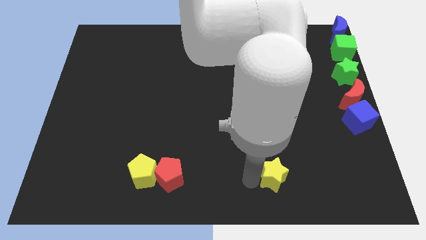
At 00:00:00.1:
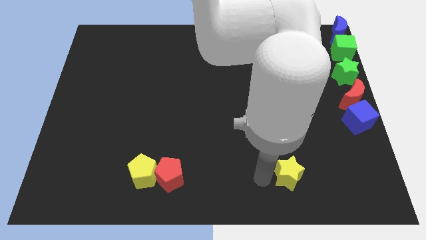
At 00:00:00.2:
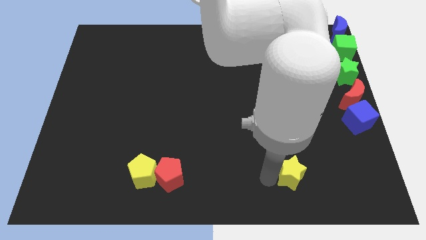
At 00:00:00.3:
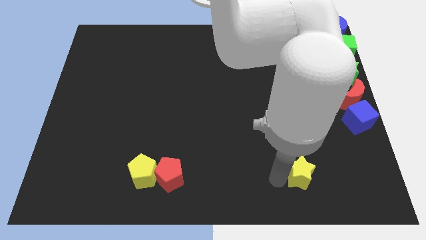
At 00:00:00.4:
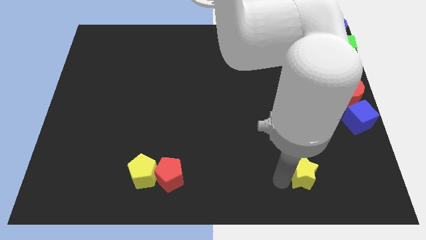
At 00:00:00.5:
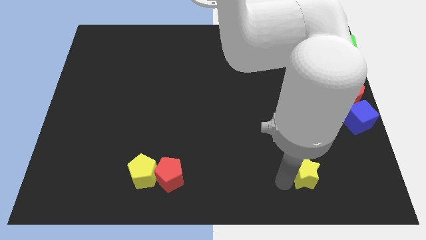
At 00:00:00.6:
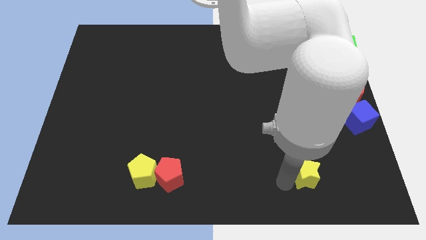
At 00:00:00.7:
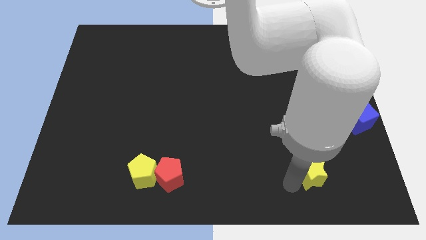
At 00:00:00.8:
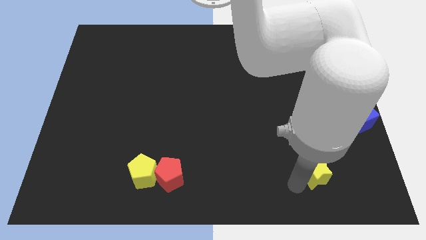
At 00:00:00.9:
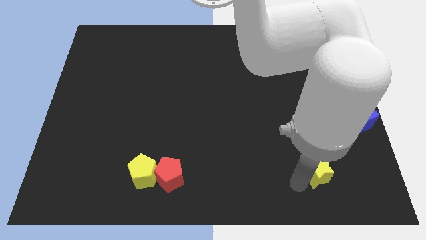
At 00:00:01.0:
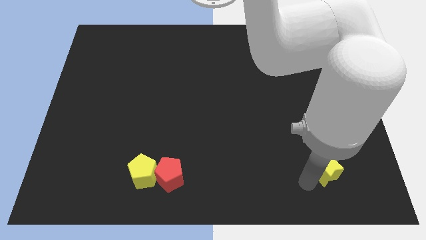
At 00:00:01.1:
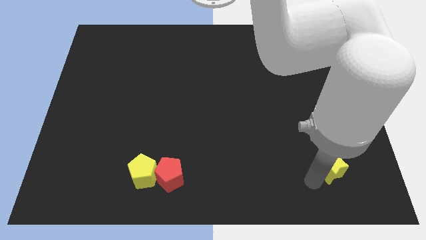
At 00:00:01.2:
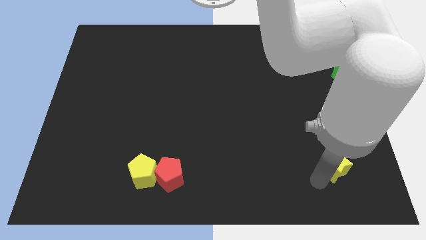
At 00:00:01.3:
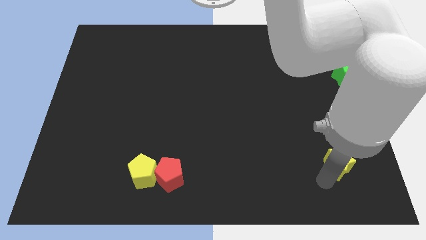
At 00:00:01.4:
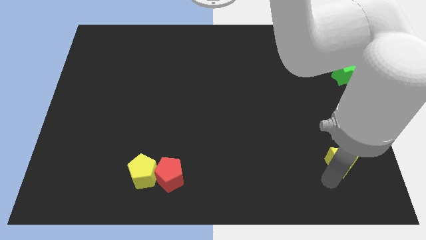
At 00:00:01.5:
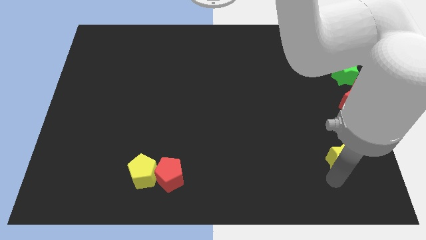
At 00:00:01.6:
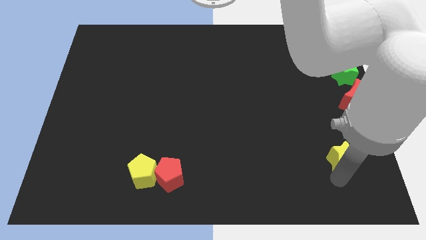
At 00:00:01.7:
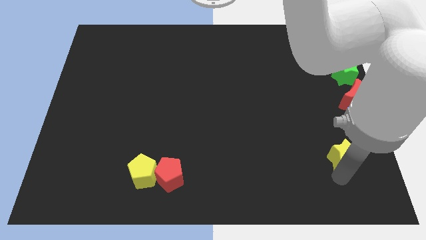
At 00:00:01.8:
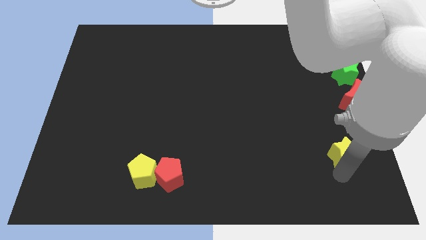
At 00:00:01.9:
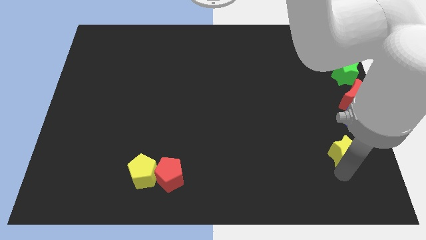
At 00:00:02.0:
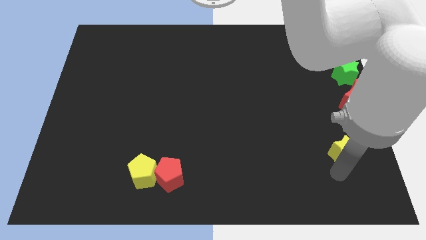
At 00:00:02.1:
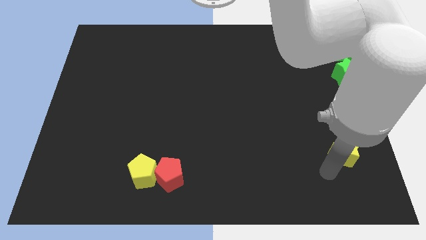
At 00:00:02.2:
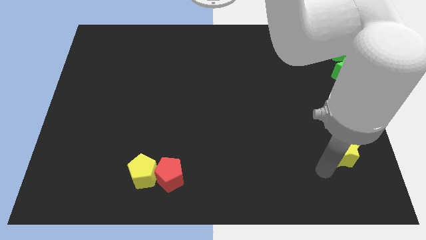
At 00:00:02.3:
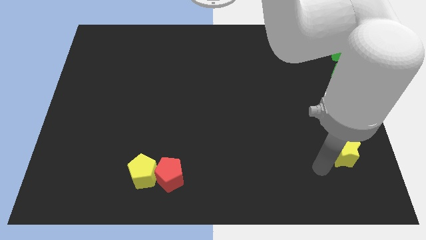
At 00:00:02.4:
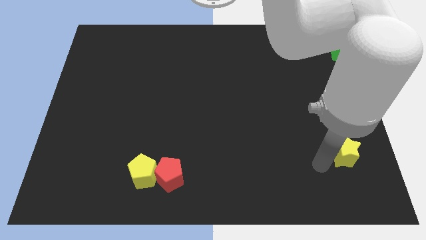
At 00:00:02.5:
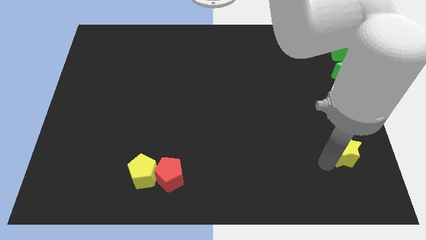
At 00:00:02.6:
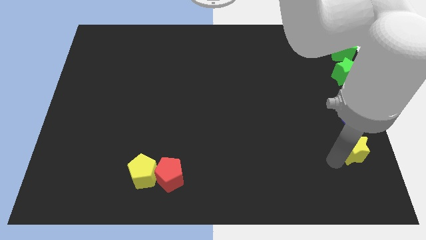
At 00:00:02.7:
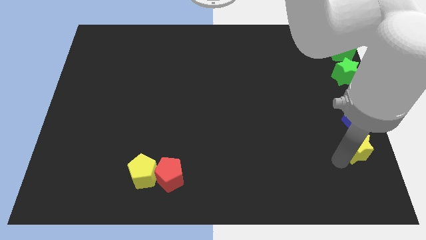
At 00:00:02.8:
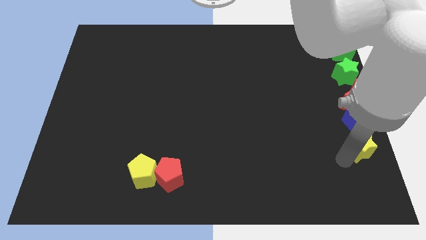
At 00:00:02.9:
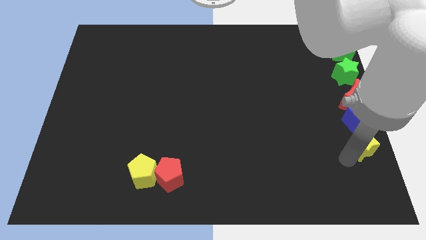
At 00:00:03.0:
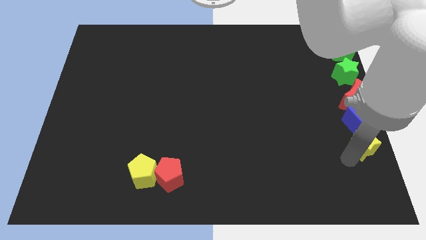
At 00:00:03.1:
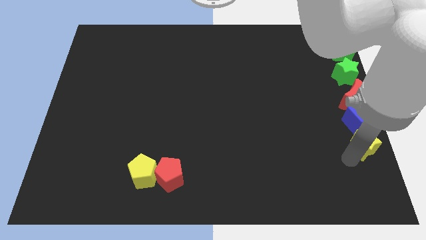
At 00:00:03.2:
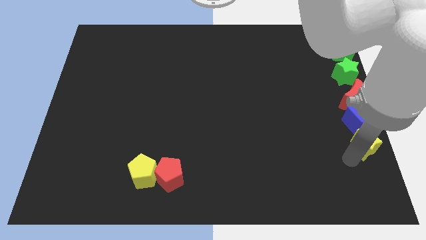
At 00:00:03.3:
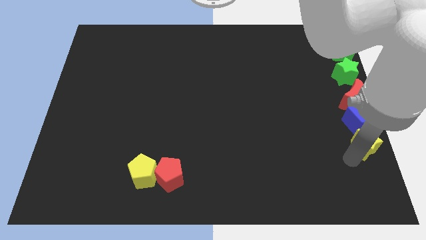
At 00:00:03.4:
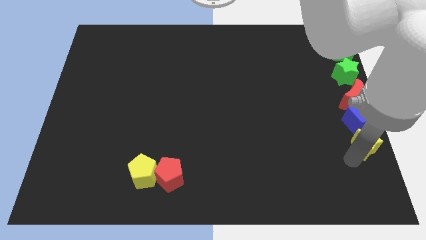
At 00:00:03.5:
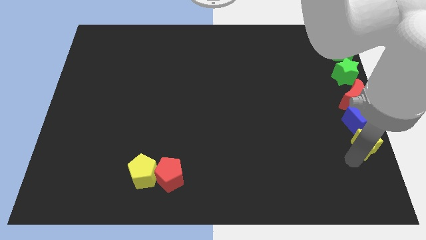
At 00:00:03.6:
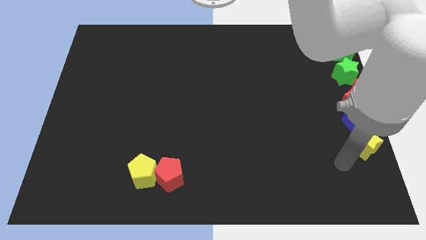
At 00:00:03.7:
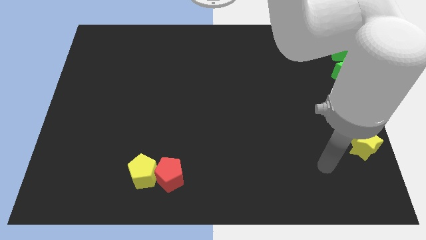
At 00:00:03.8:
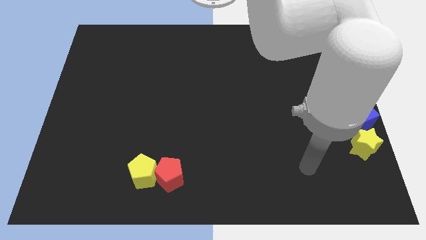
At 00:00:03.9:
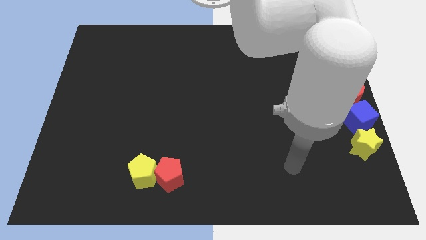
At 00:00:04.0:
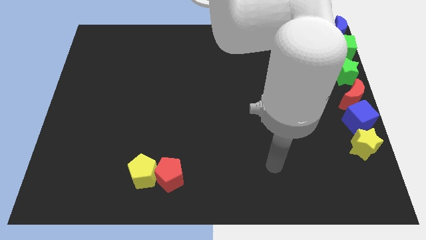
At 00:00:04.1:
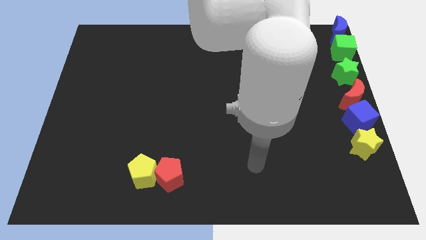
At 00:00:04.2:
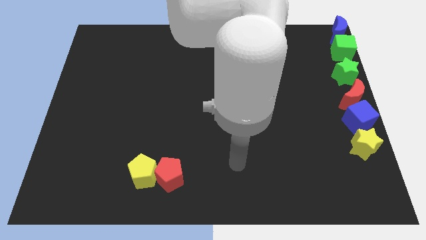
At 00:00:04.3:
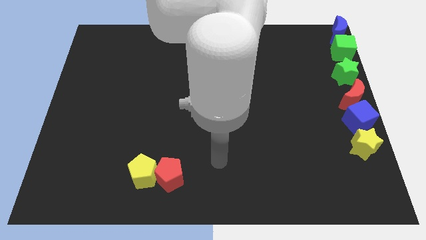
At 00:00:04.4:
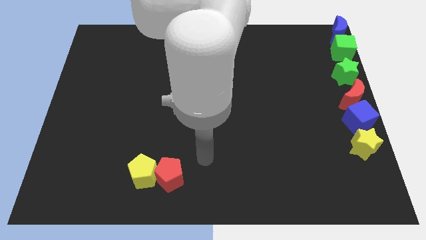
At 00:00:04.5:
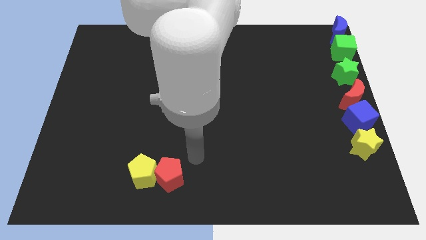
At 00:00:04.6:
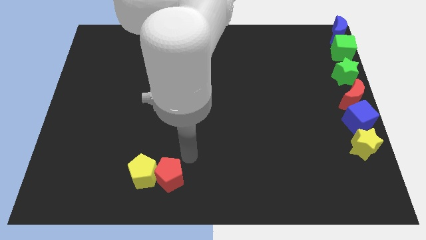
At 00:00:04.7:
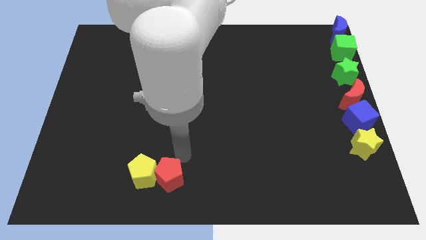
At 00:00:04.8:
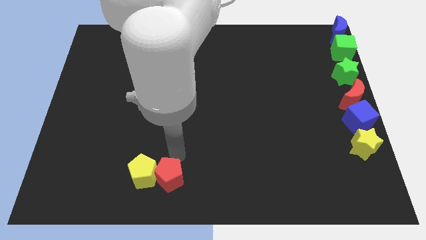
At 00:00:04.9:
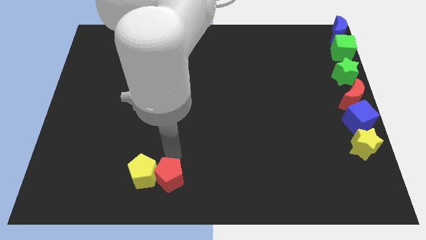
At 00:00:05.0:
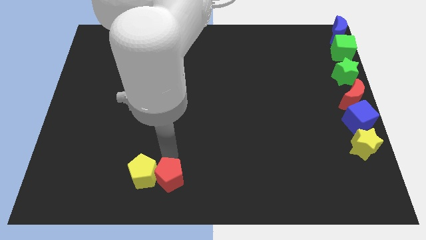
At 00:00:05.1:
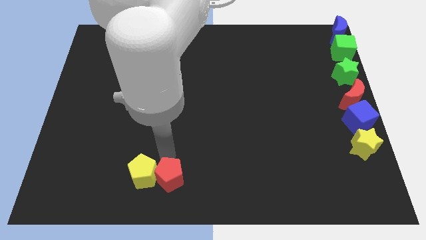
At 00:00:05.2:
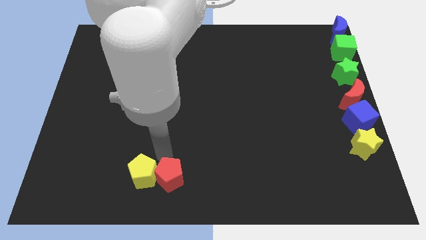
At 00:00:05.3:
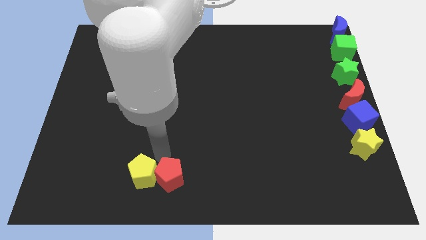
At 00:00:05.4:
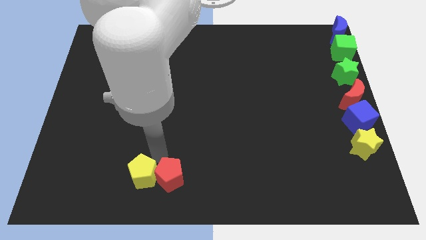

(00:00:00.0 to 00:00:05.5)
place the yellow star to the bottom of the blue cube

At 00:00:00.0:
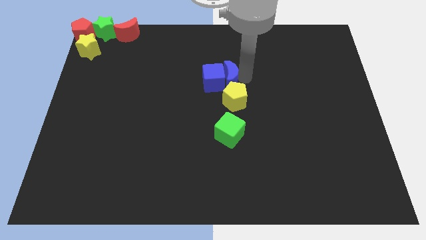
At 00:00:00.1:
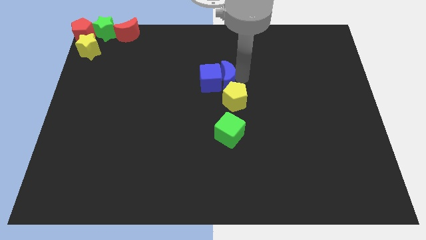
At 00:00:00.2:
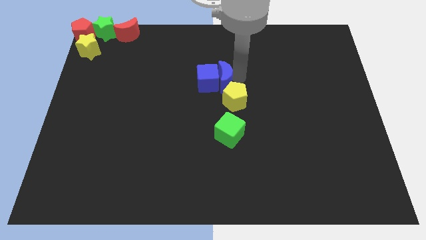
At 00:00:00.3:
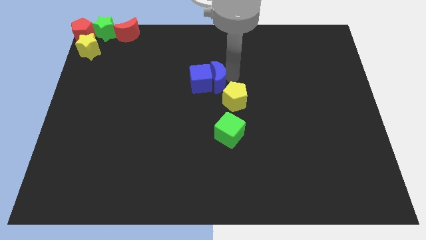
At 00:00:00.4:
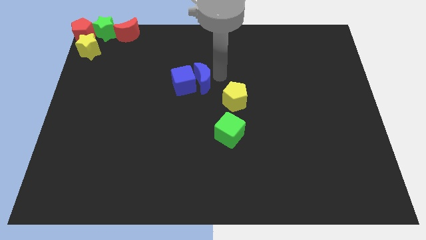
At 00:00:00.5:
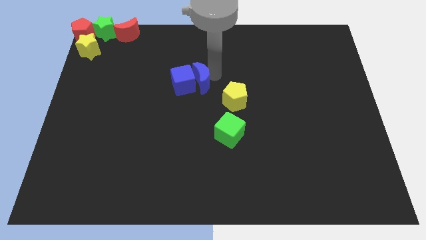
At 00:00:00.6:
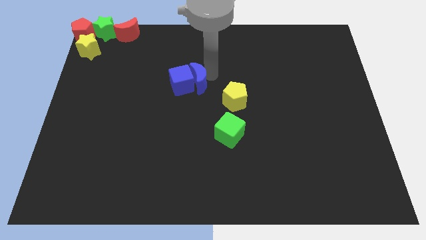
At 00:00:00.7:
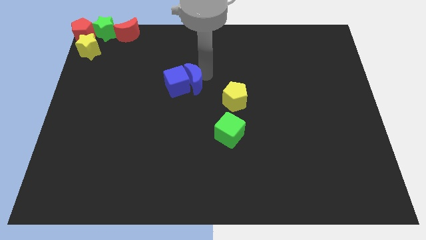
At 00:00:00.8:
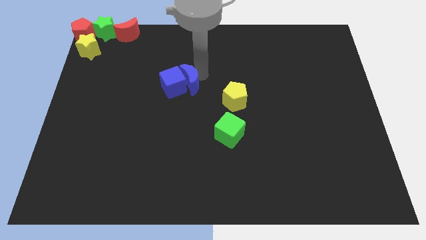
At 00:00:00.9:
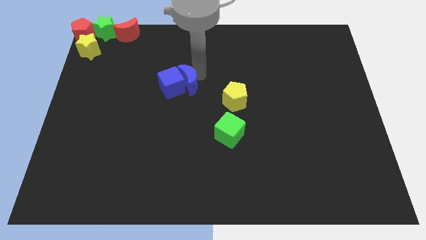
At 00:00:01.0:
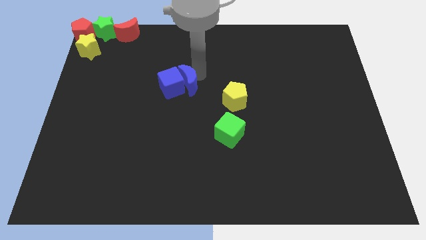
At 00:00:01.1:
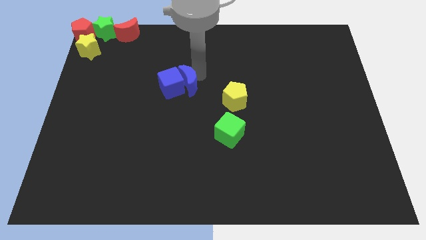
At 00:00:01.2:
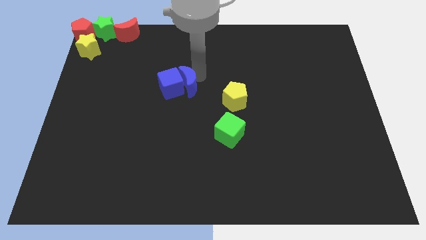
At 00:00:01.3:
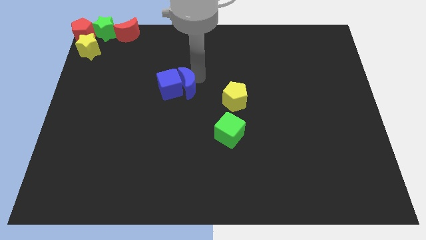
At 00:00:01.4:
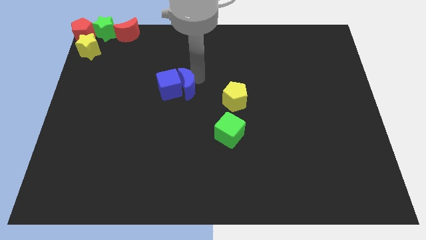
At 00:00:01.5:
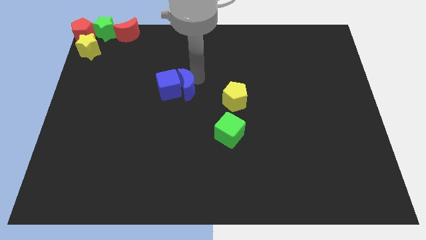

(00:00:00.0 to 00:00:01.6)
place the blue blocks diagonal top left to yellow pentagon

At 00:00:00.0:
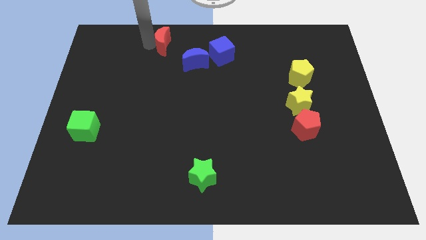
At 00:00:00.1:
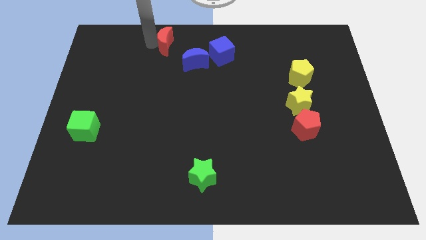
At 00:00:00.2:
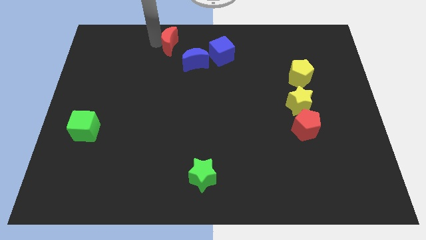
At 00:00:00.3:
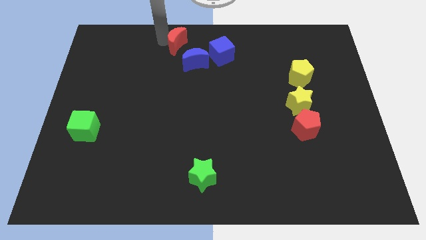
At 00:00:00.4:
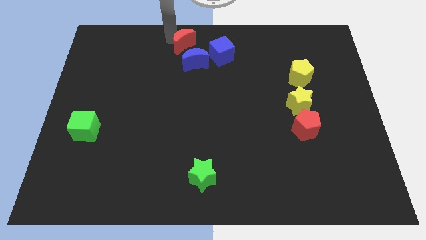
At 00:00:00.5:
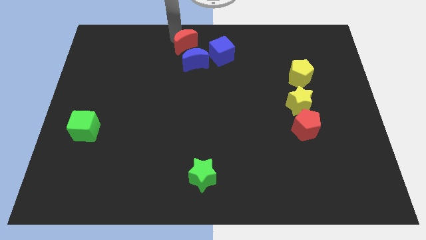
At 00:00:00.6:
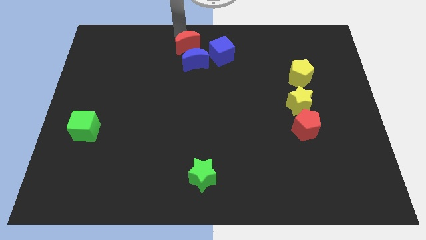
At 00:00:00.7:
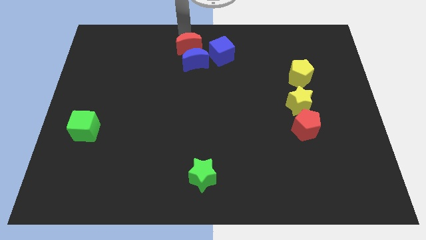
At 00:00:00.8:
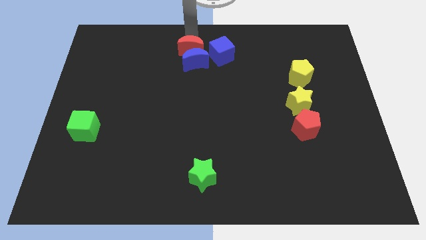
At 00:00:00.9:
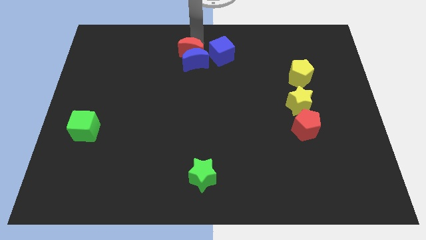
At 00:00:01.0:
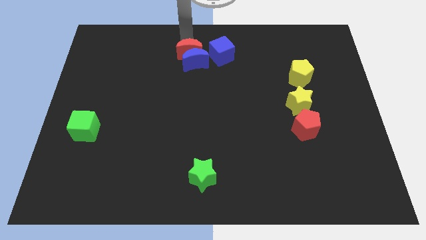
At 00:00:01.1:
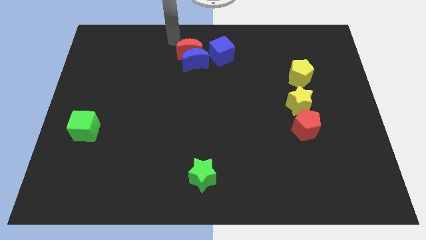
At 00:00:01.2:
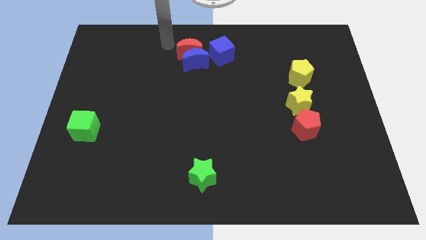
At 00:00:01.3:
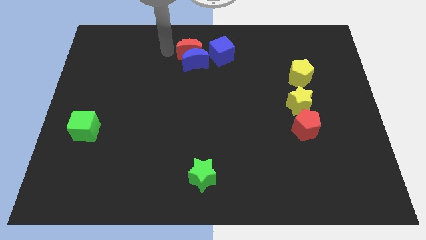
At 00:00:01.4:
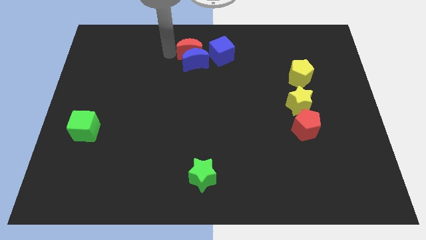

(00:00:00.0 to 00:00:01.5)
place the red moon to the top of the blue crescent

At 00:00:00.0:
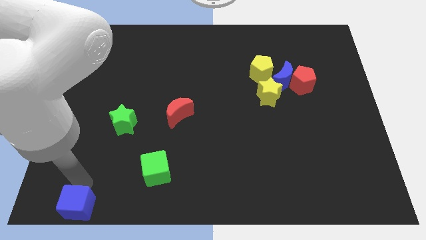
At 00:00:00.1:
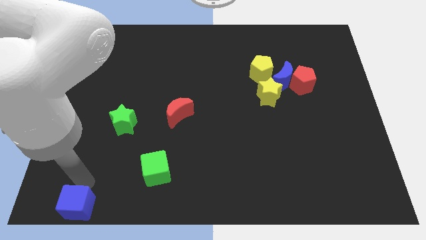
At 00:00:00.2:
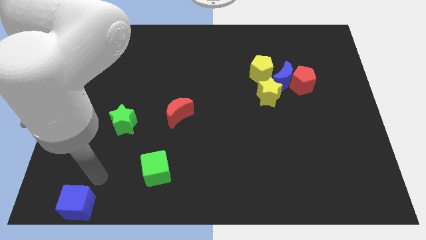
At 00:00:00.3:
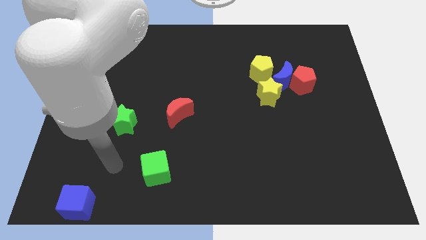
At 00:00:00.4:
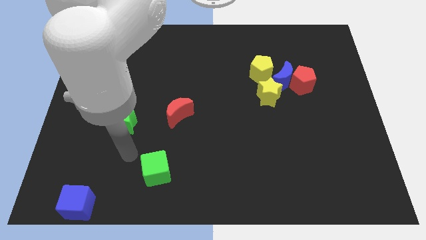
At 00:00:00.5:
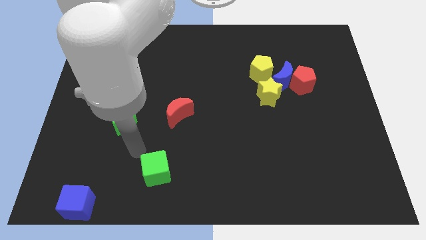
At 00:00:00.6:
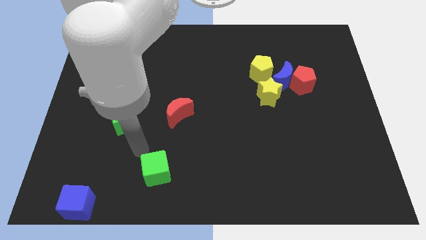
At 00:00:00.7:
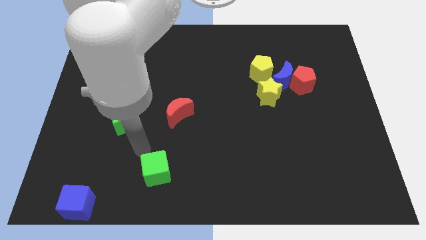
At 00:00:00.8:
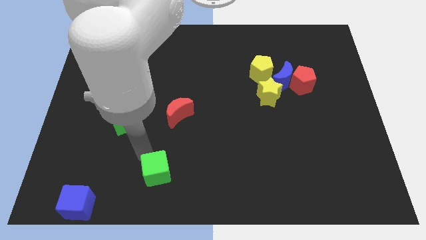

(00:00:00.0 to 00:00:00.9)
point your arm at the top of the green cube
